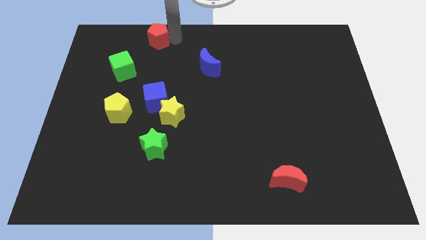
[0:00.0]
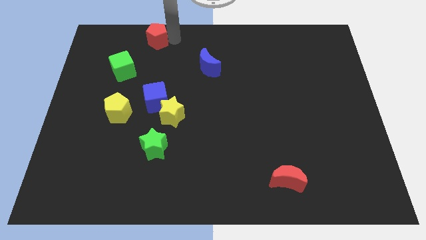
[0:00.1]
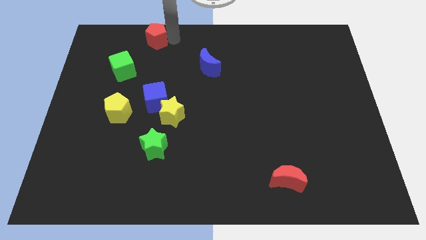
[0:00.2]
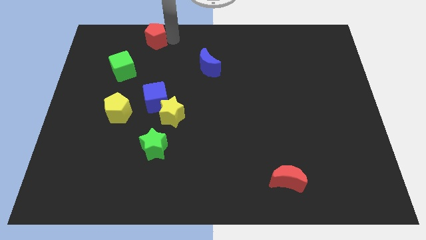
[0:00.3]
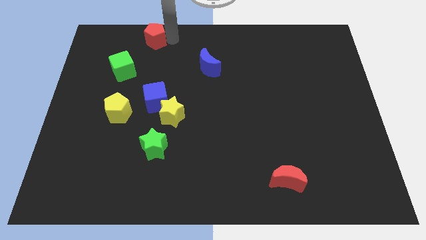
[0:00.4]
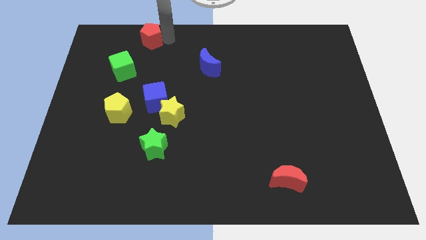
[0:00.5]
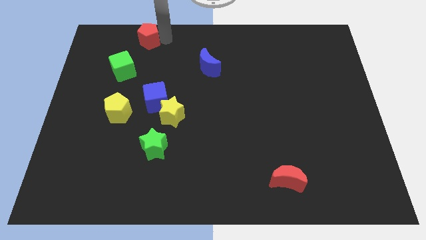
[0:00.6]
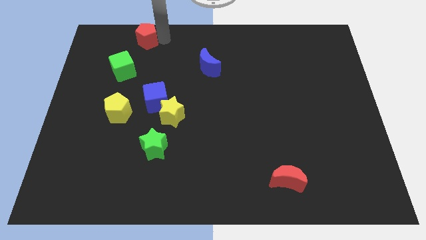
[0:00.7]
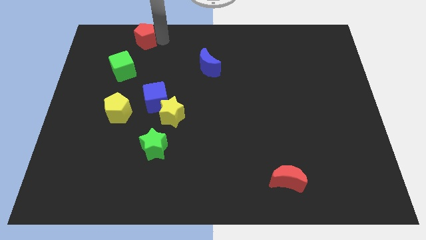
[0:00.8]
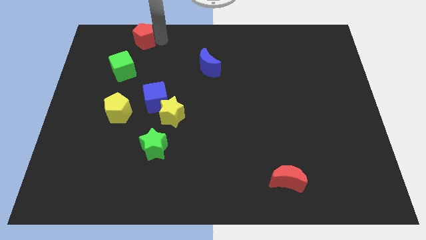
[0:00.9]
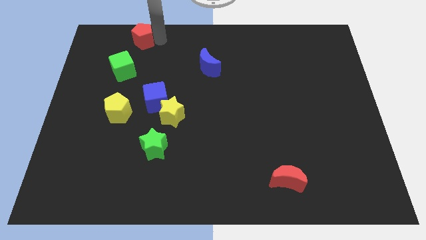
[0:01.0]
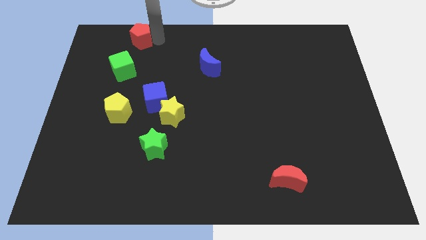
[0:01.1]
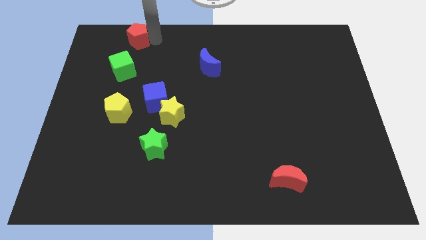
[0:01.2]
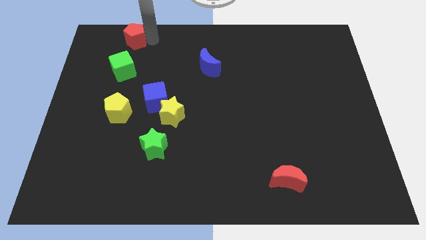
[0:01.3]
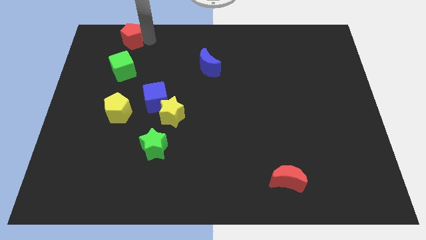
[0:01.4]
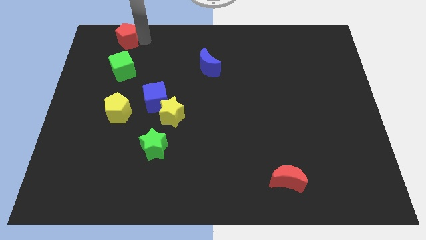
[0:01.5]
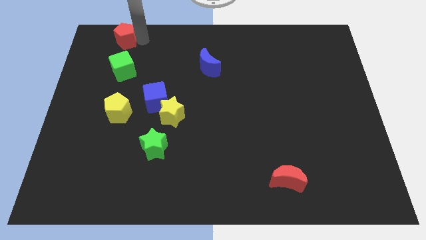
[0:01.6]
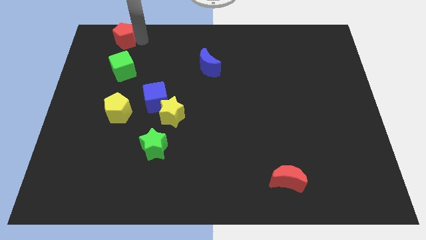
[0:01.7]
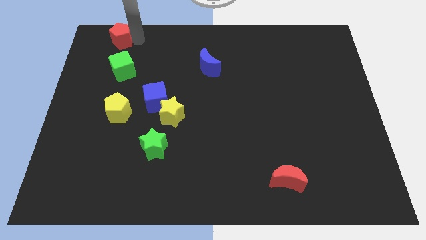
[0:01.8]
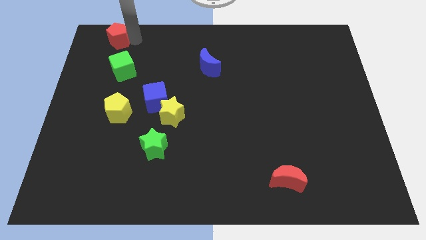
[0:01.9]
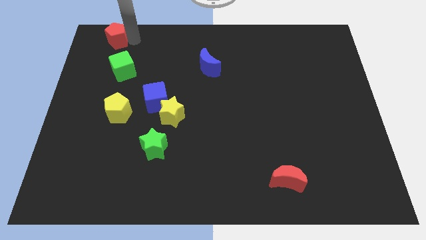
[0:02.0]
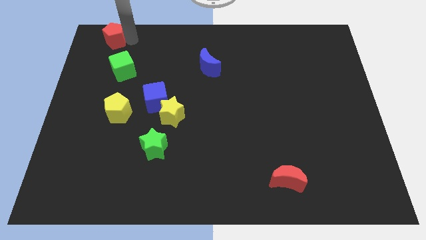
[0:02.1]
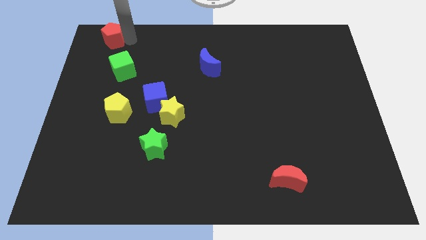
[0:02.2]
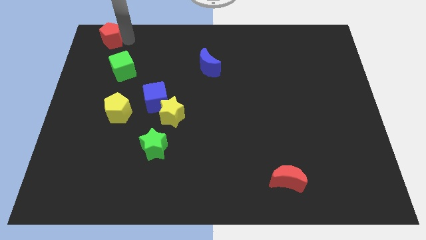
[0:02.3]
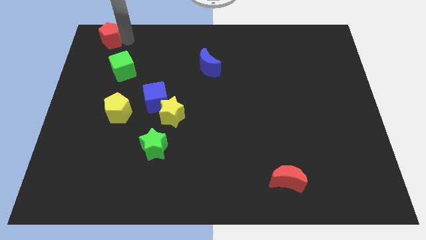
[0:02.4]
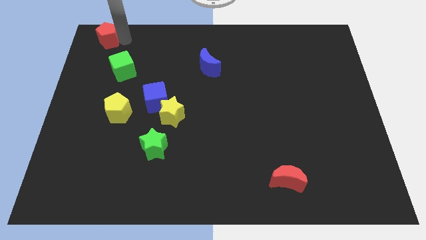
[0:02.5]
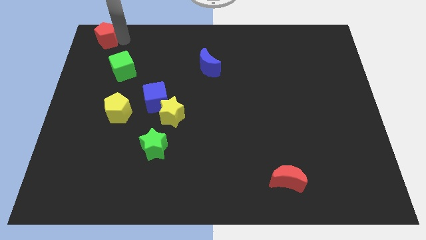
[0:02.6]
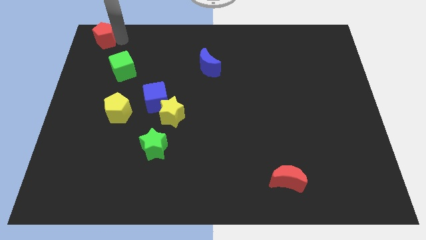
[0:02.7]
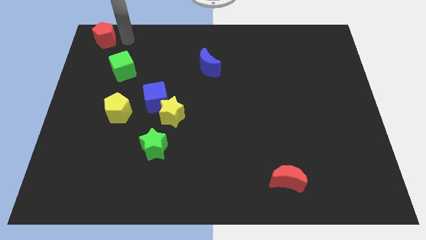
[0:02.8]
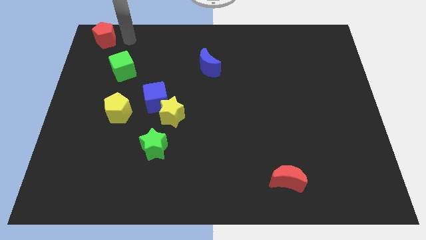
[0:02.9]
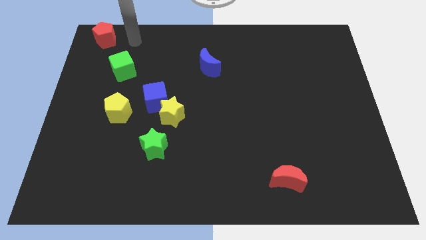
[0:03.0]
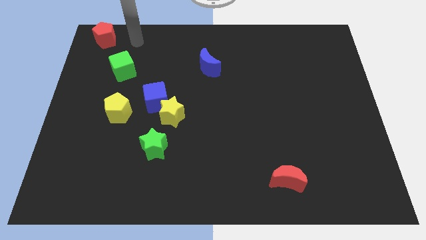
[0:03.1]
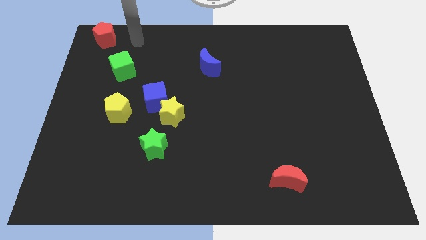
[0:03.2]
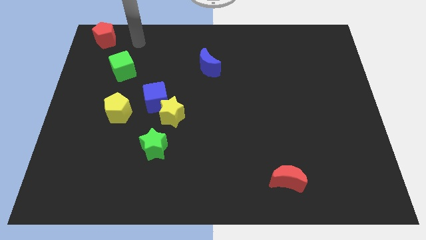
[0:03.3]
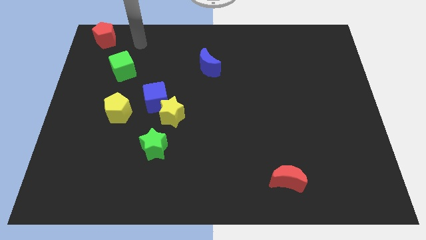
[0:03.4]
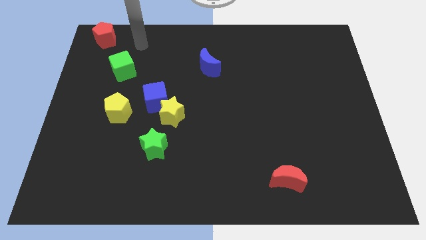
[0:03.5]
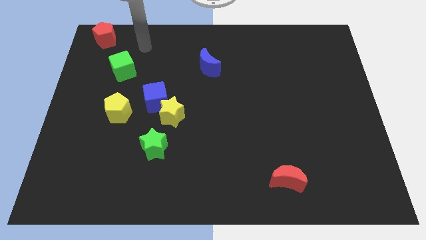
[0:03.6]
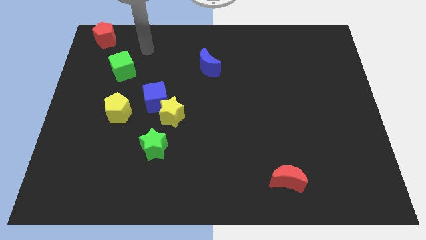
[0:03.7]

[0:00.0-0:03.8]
push the red pentagon towards the top left of the board

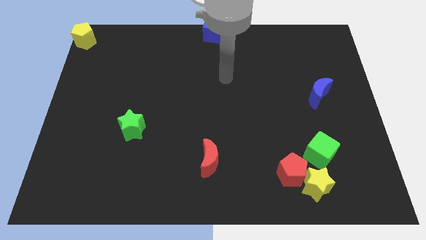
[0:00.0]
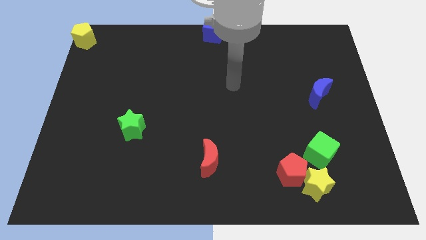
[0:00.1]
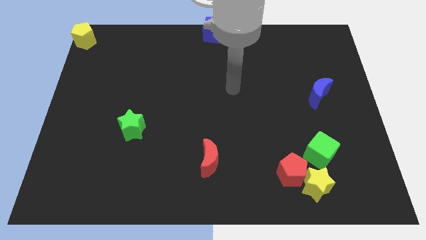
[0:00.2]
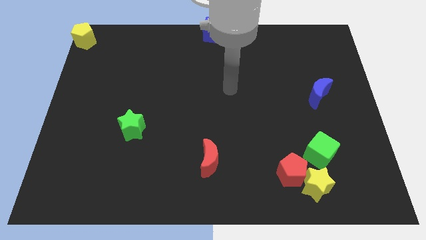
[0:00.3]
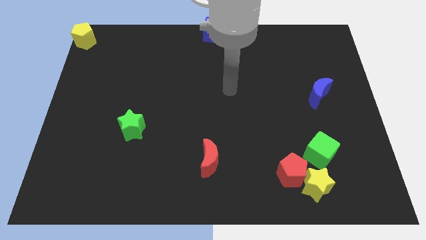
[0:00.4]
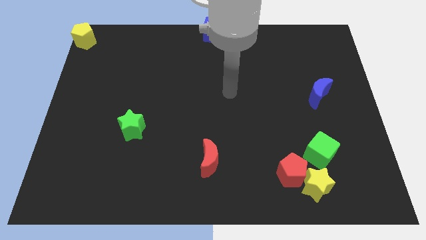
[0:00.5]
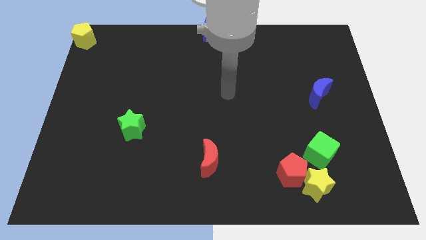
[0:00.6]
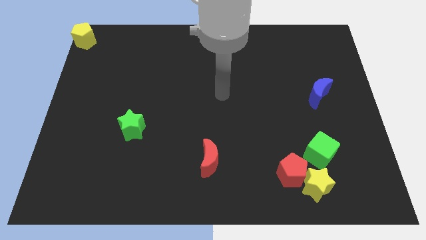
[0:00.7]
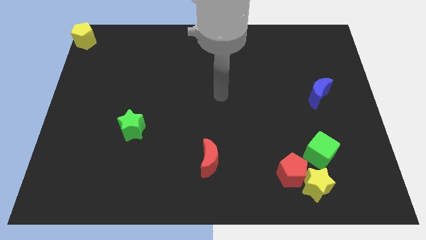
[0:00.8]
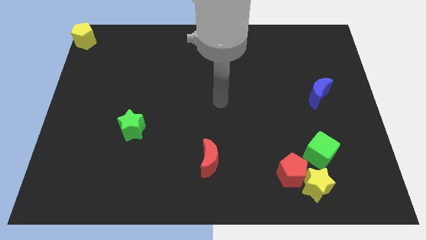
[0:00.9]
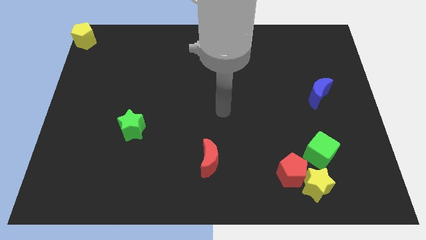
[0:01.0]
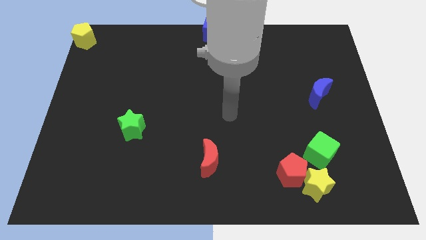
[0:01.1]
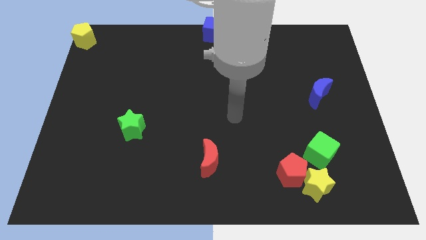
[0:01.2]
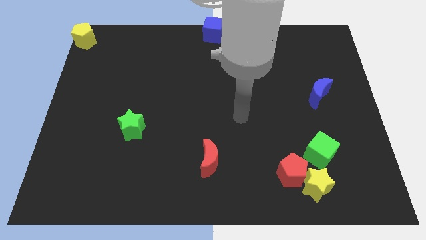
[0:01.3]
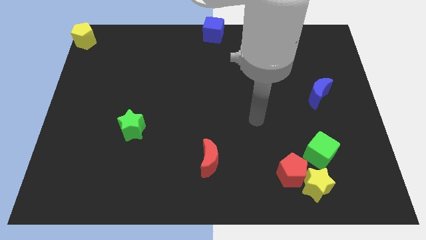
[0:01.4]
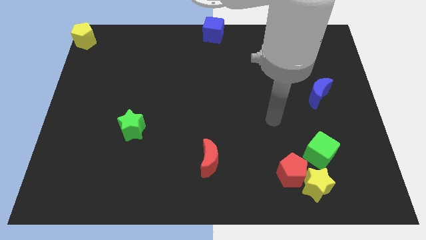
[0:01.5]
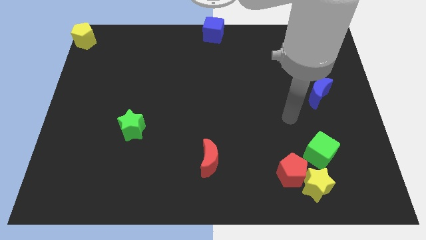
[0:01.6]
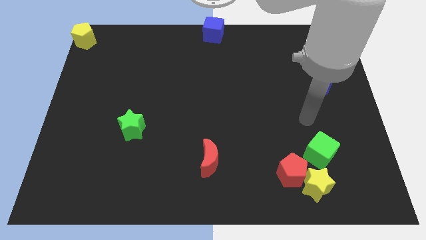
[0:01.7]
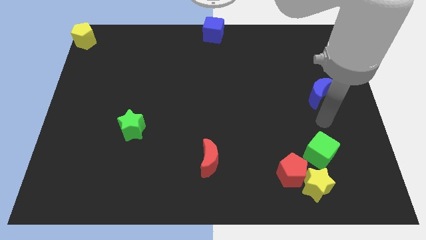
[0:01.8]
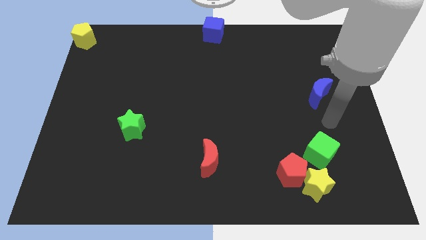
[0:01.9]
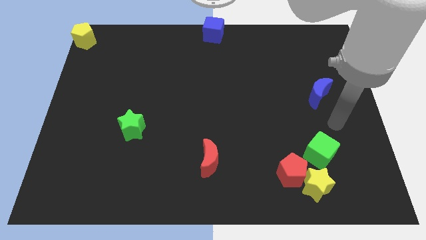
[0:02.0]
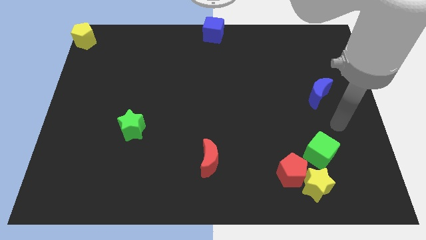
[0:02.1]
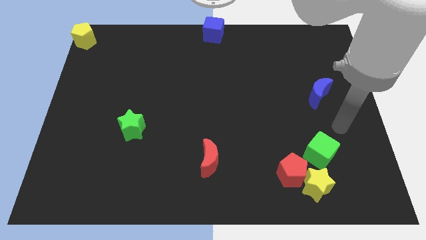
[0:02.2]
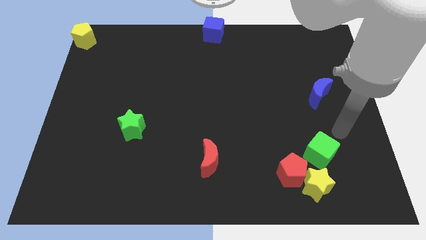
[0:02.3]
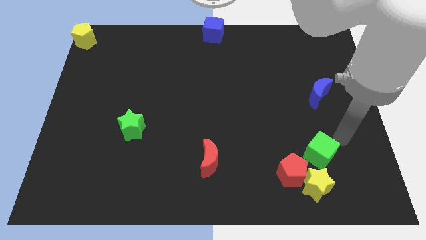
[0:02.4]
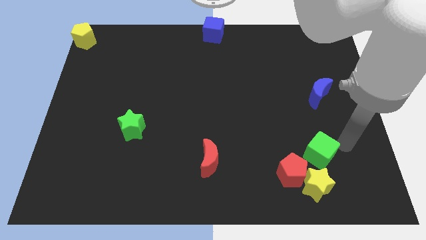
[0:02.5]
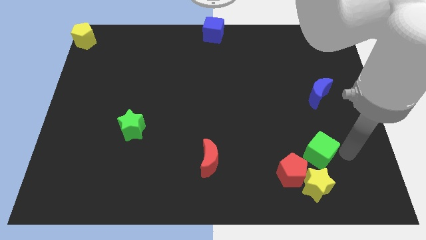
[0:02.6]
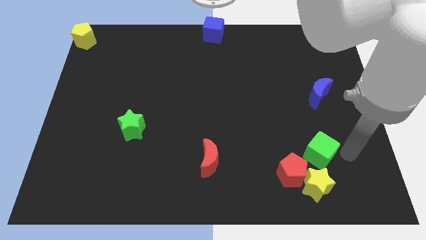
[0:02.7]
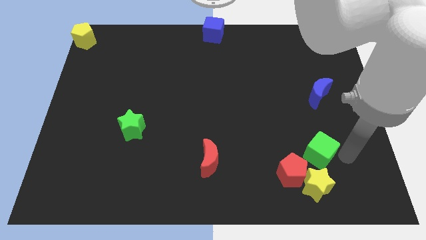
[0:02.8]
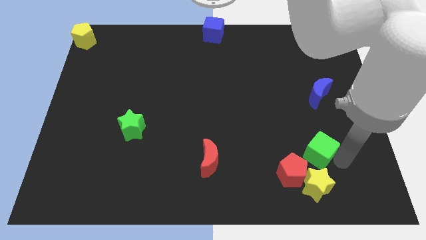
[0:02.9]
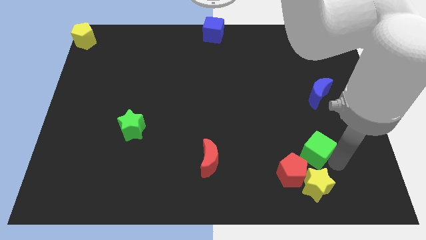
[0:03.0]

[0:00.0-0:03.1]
go and tap the top right side of the green cube

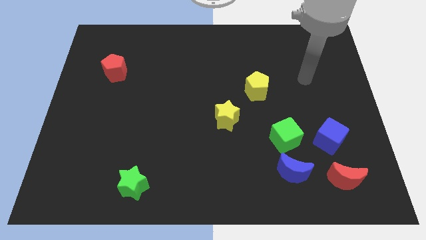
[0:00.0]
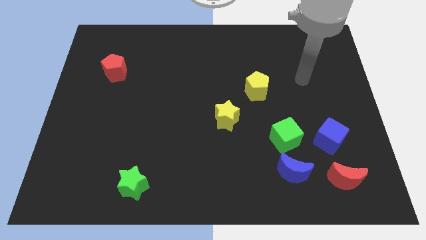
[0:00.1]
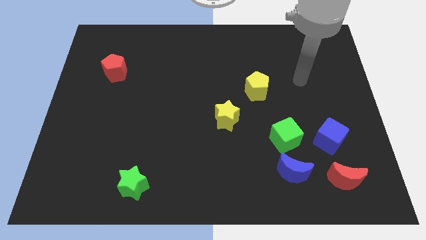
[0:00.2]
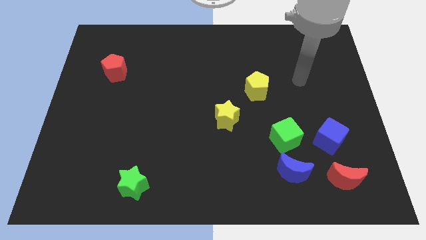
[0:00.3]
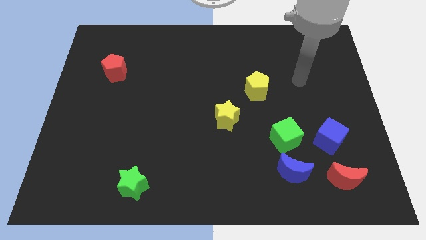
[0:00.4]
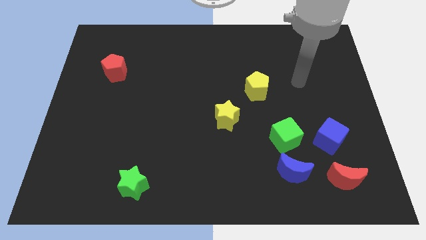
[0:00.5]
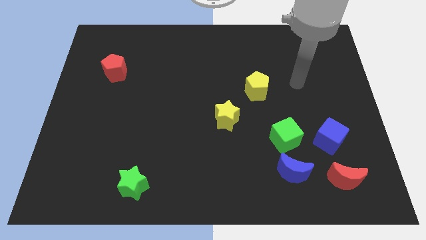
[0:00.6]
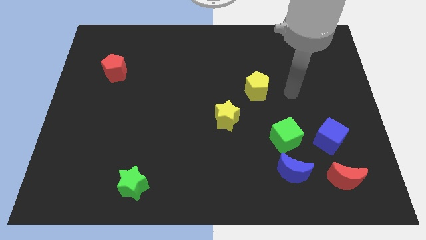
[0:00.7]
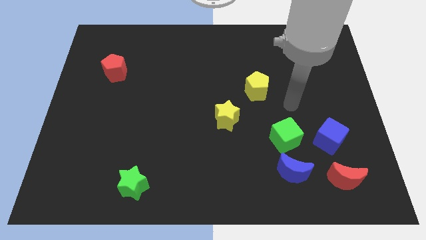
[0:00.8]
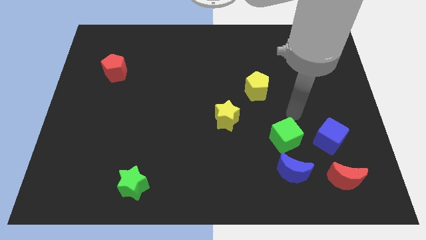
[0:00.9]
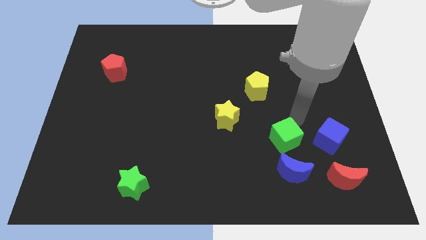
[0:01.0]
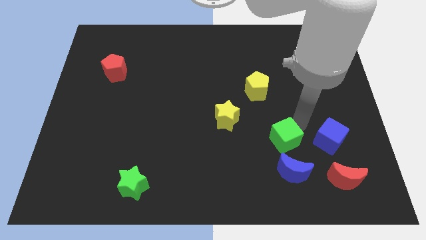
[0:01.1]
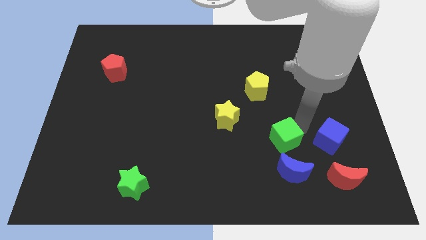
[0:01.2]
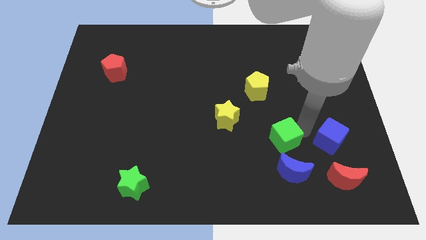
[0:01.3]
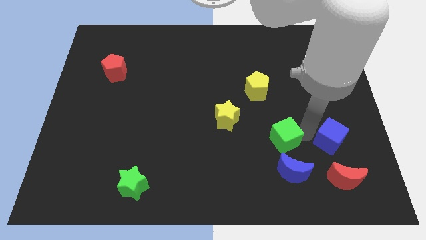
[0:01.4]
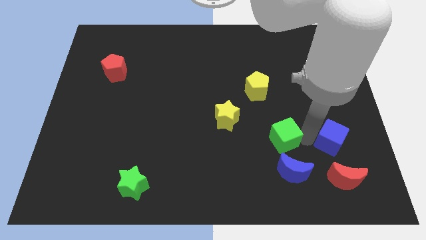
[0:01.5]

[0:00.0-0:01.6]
put your hand in between the green cube and blue cube

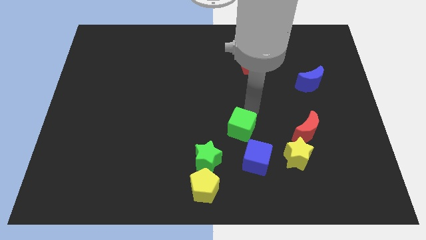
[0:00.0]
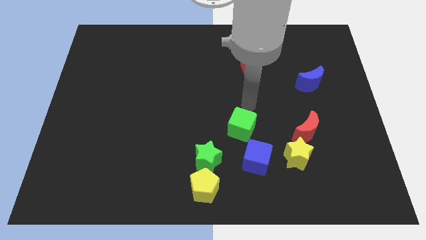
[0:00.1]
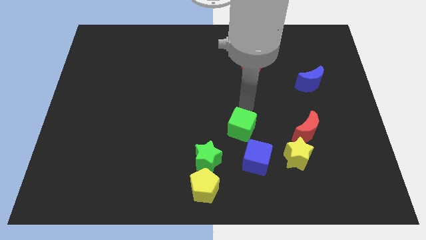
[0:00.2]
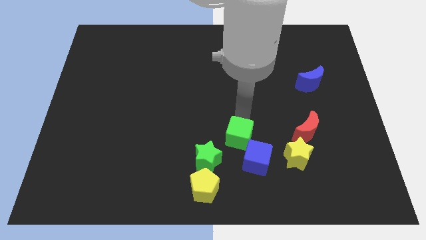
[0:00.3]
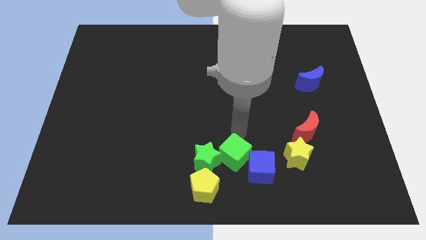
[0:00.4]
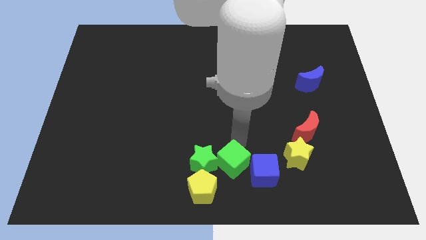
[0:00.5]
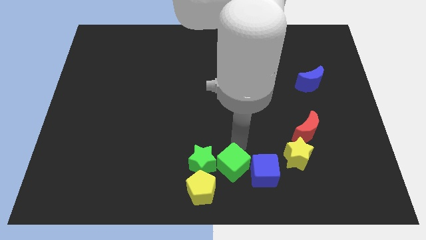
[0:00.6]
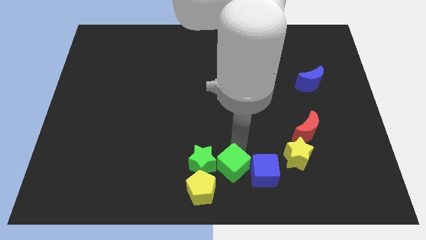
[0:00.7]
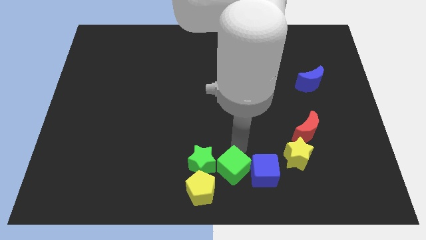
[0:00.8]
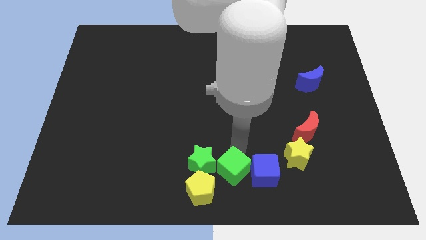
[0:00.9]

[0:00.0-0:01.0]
place the green cube in between the green star and blue cube
